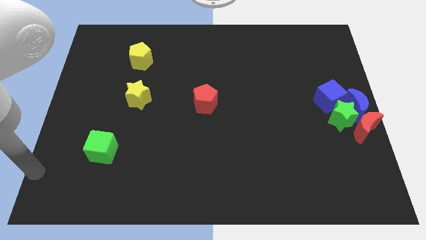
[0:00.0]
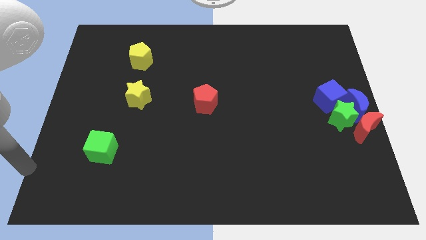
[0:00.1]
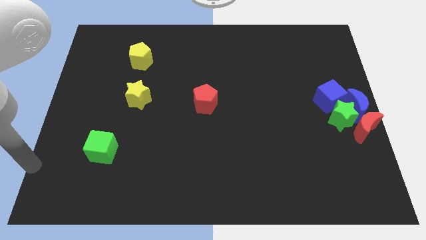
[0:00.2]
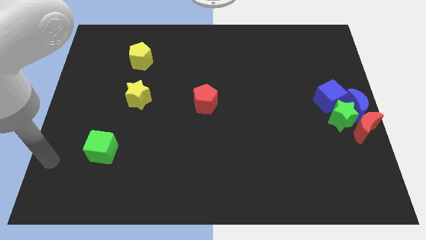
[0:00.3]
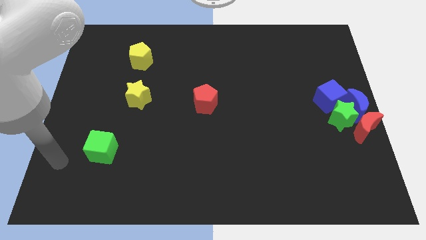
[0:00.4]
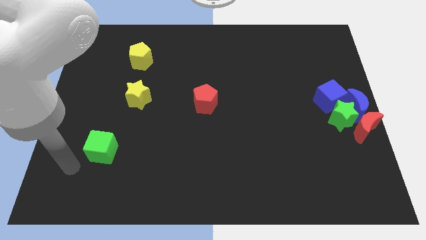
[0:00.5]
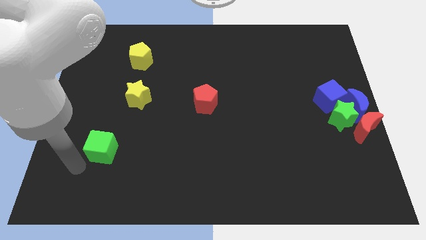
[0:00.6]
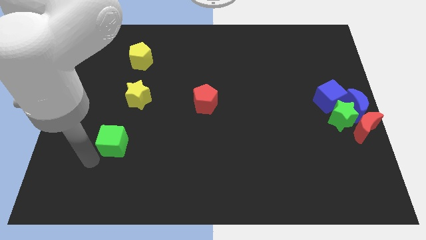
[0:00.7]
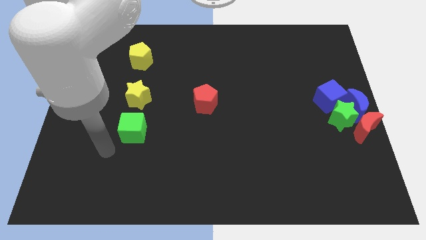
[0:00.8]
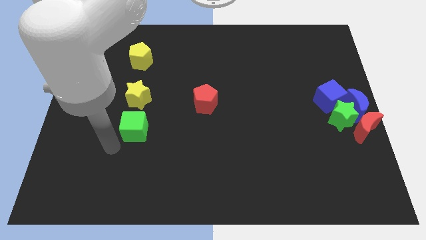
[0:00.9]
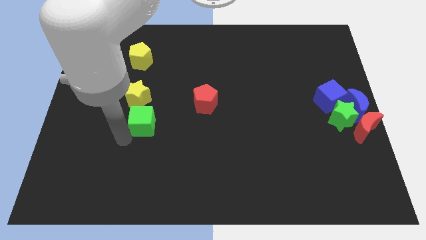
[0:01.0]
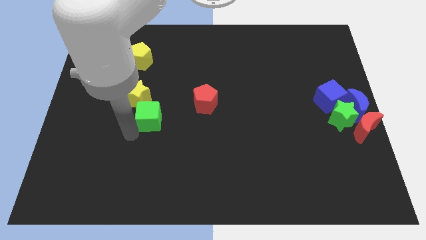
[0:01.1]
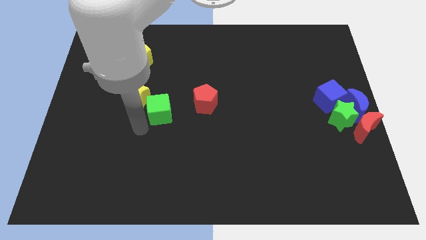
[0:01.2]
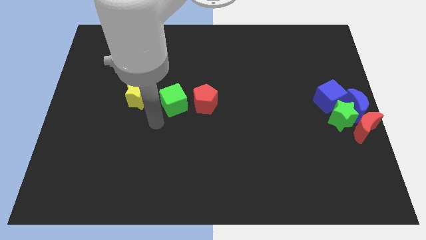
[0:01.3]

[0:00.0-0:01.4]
place the green cube in between the red pentagon and the yellow star

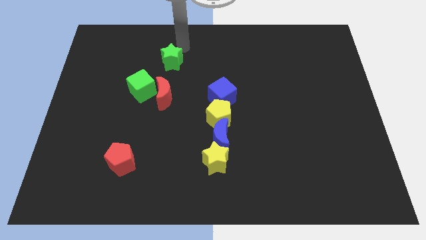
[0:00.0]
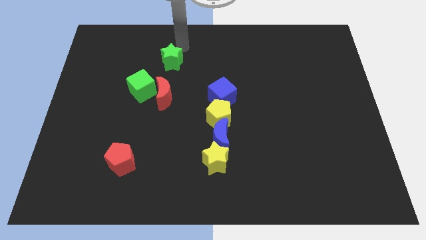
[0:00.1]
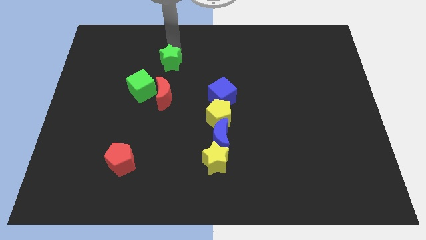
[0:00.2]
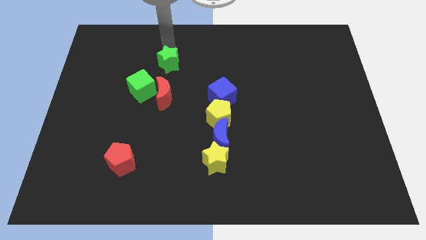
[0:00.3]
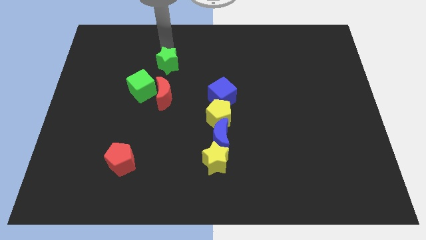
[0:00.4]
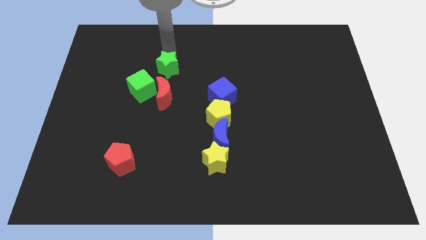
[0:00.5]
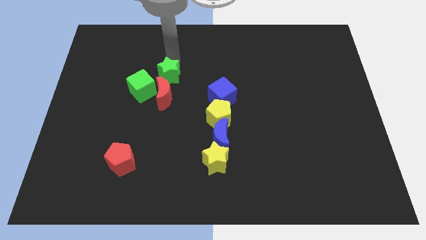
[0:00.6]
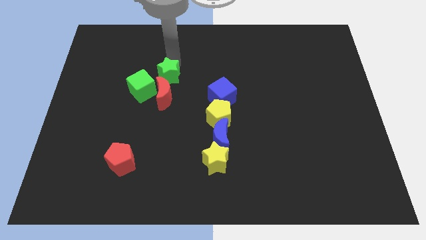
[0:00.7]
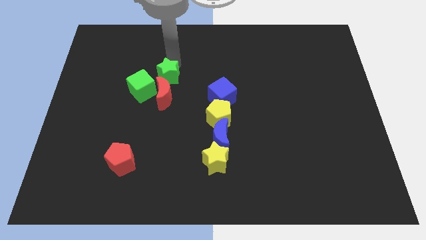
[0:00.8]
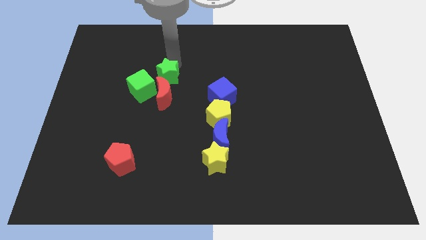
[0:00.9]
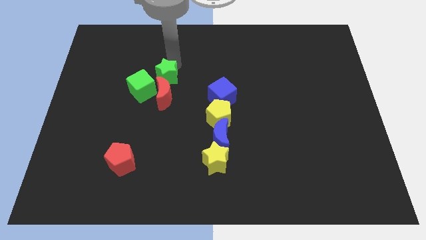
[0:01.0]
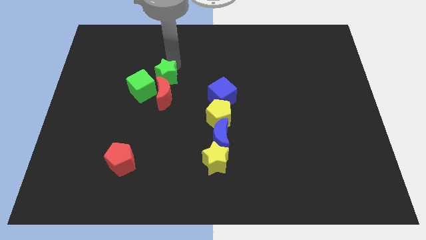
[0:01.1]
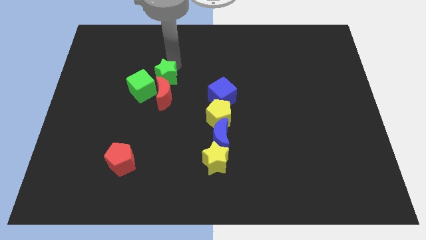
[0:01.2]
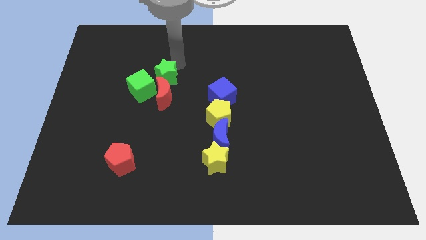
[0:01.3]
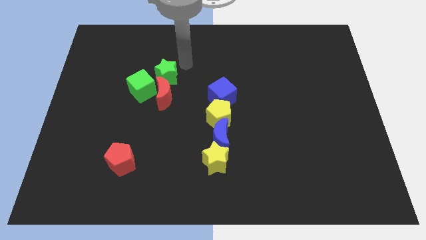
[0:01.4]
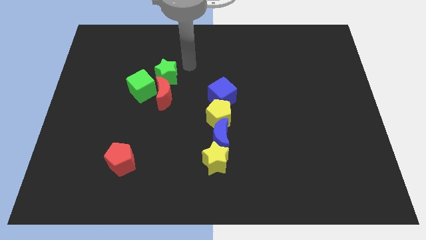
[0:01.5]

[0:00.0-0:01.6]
move the green star to the top of red crescent on the board

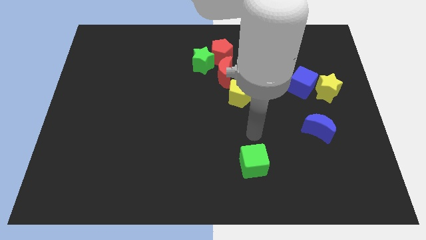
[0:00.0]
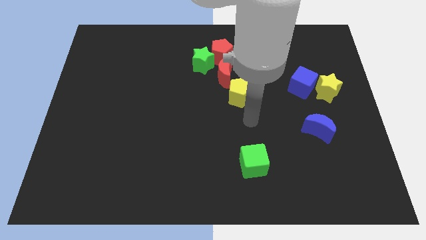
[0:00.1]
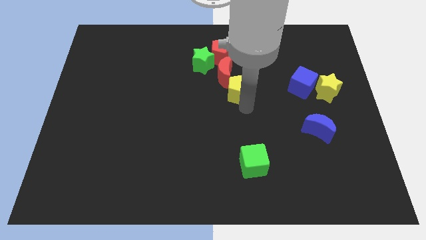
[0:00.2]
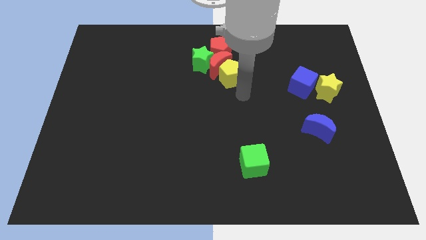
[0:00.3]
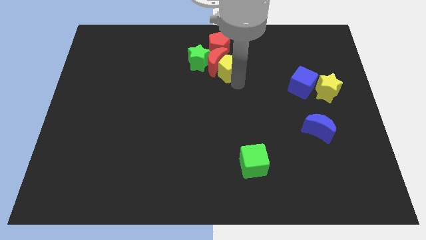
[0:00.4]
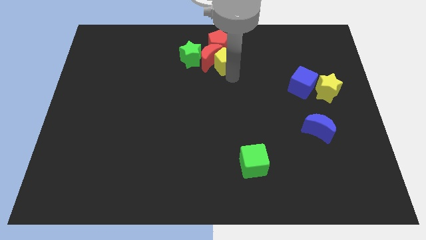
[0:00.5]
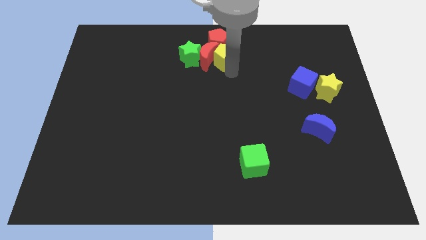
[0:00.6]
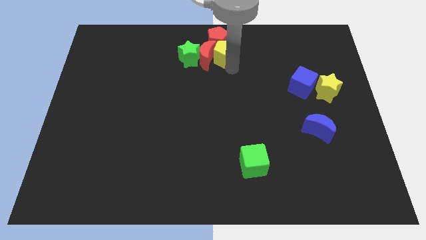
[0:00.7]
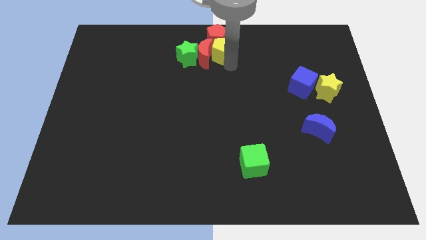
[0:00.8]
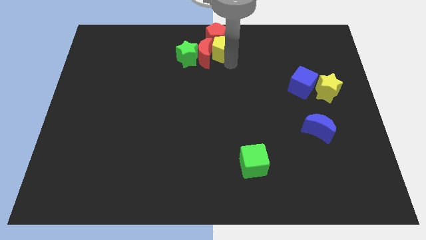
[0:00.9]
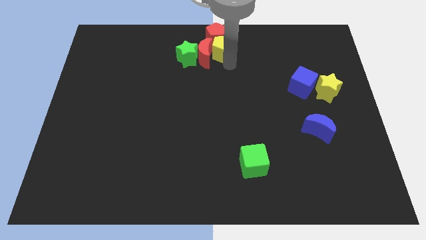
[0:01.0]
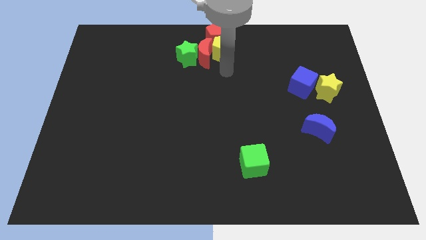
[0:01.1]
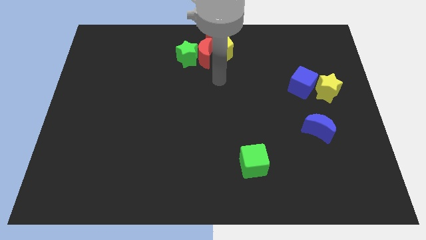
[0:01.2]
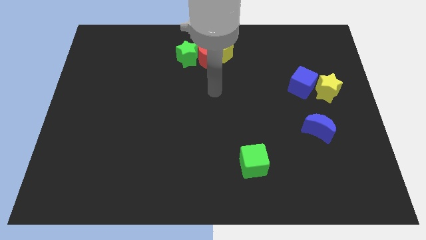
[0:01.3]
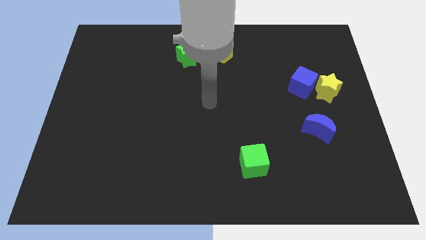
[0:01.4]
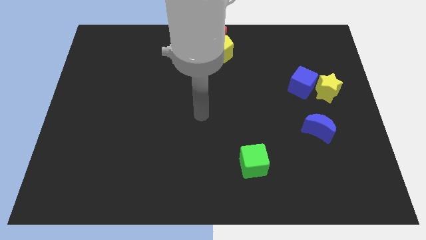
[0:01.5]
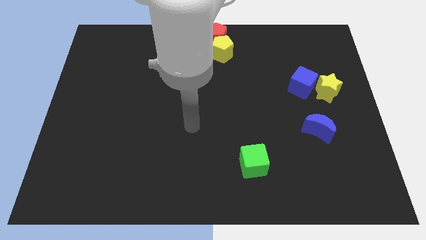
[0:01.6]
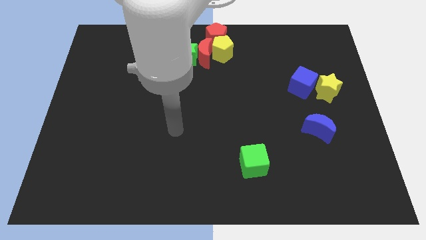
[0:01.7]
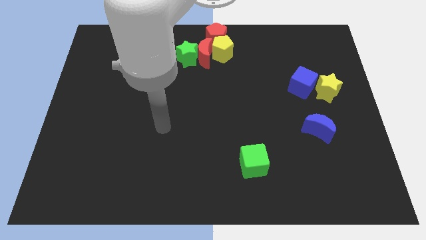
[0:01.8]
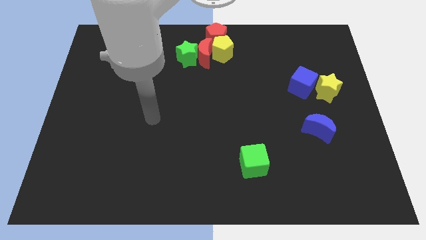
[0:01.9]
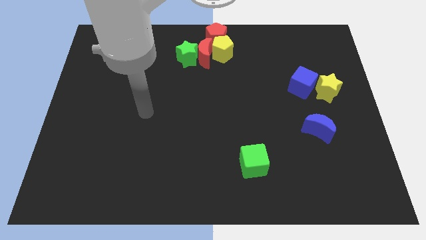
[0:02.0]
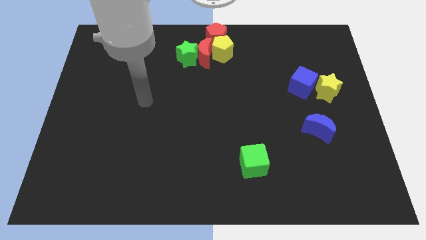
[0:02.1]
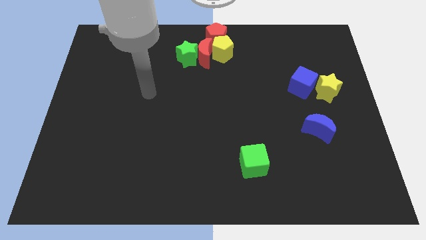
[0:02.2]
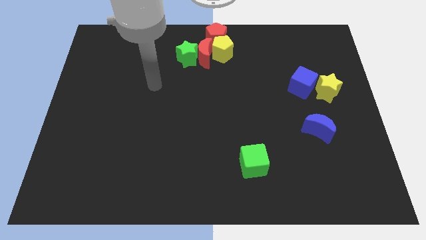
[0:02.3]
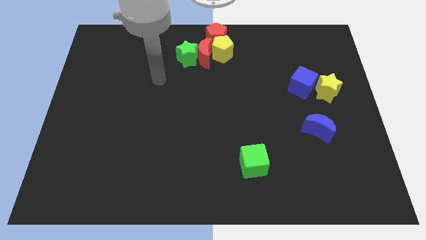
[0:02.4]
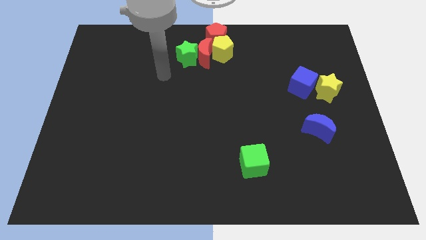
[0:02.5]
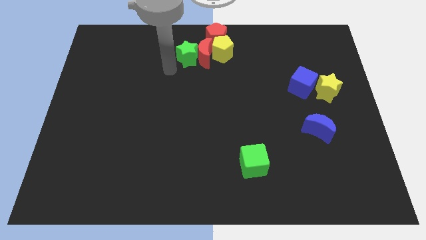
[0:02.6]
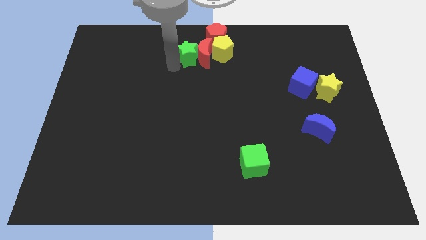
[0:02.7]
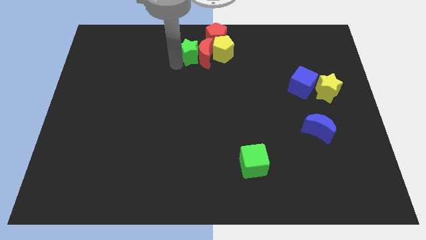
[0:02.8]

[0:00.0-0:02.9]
push the yellow pentagon into the group of red blocks

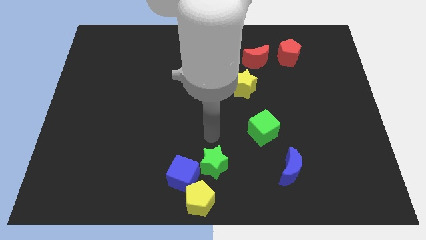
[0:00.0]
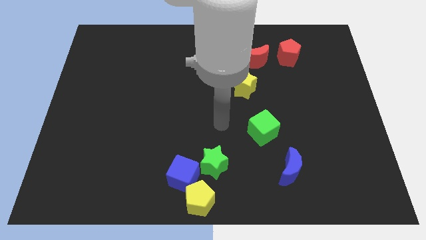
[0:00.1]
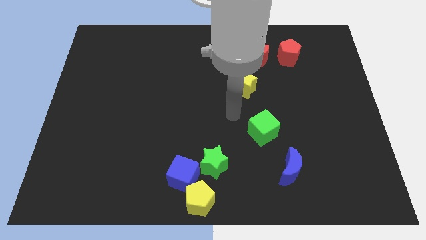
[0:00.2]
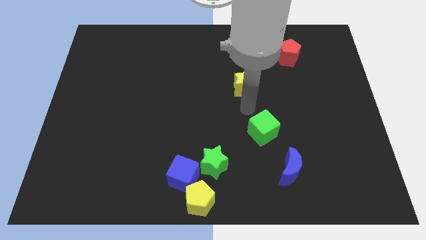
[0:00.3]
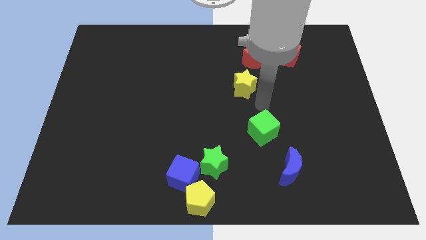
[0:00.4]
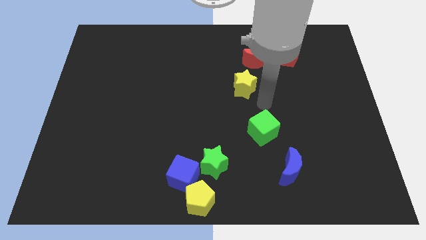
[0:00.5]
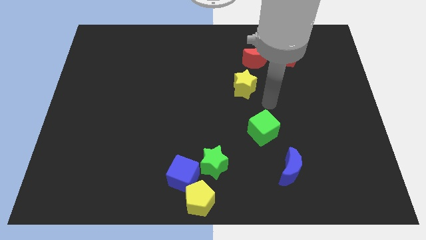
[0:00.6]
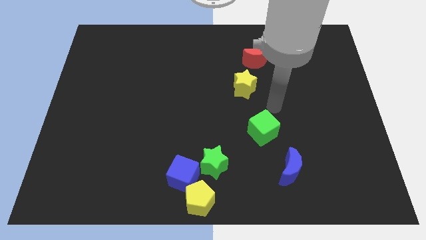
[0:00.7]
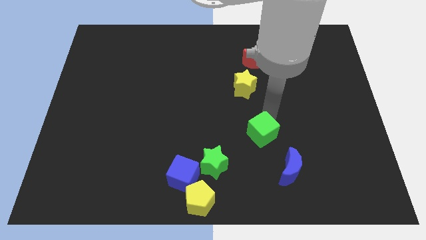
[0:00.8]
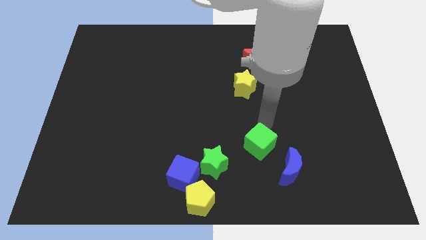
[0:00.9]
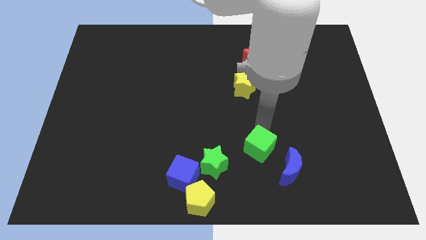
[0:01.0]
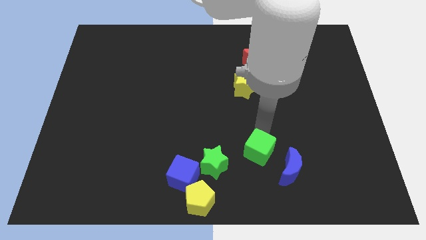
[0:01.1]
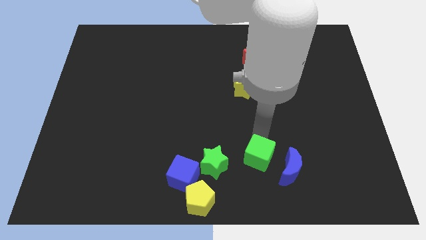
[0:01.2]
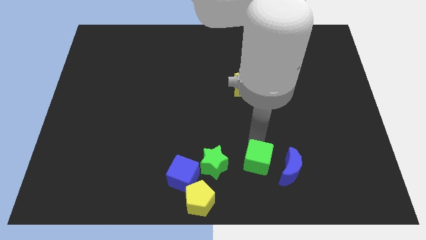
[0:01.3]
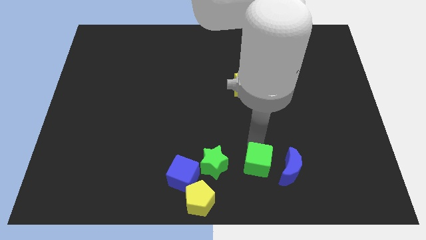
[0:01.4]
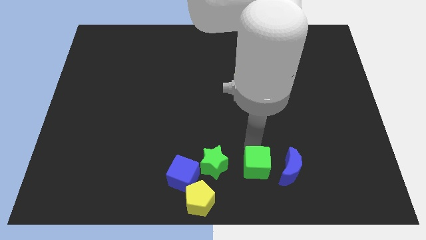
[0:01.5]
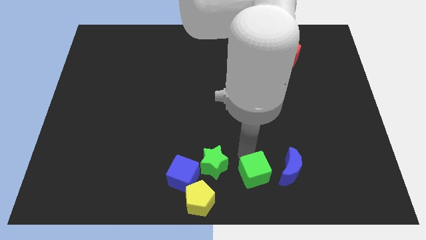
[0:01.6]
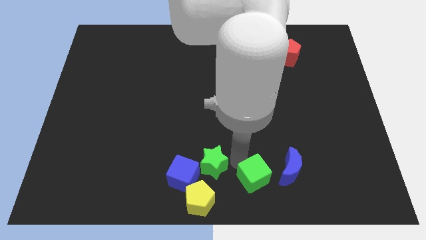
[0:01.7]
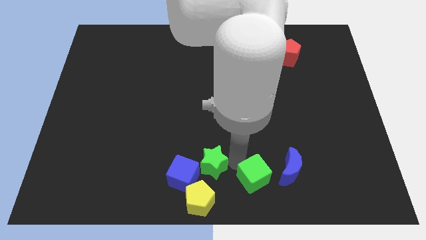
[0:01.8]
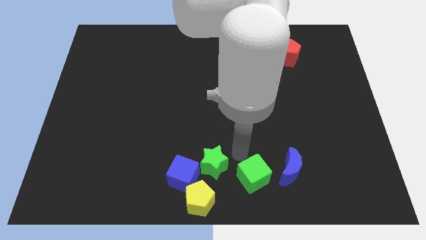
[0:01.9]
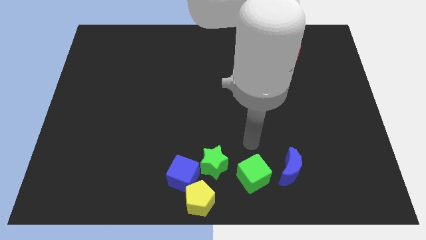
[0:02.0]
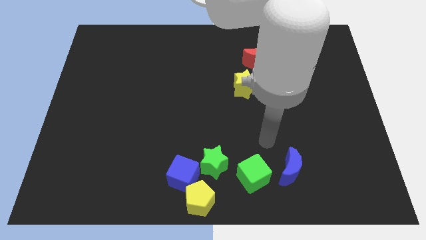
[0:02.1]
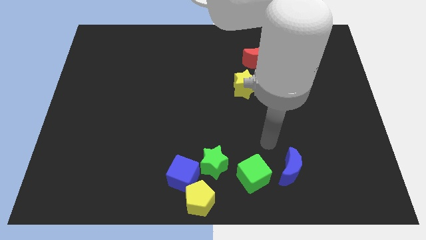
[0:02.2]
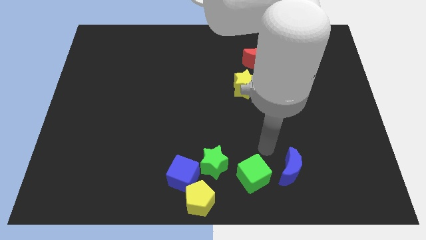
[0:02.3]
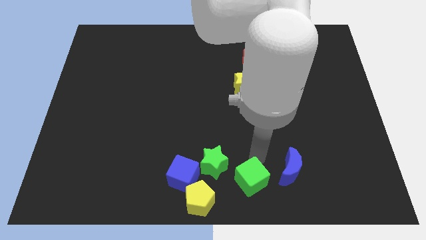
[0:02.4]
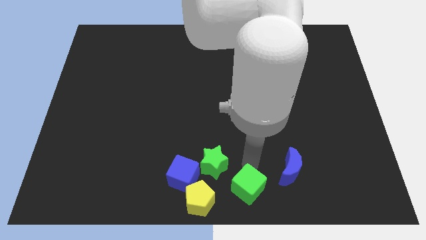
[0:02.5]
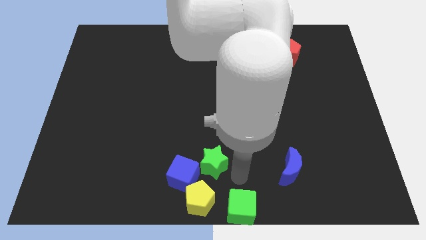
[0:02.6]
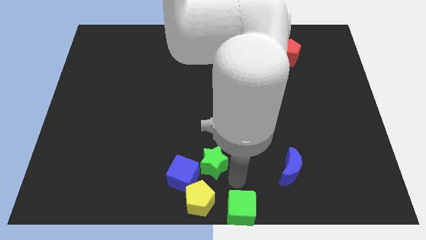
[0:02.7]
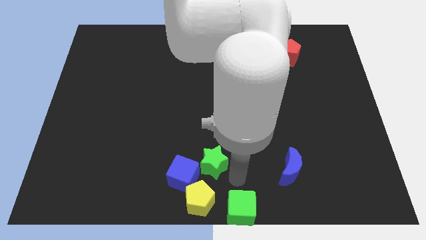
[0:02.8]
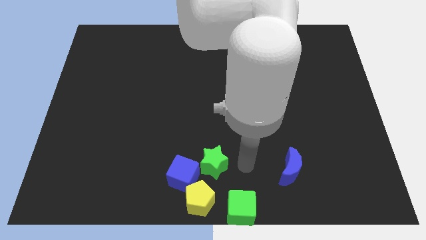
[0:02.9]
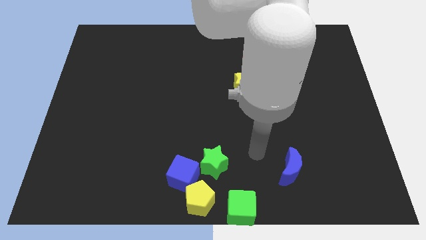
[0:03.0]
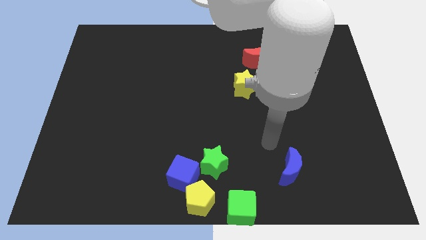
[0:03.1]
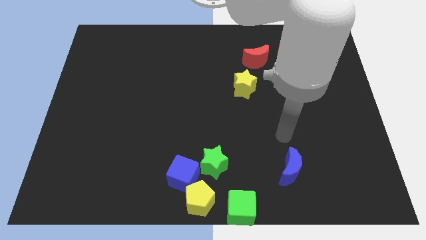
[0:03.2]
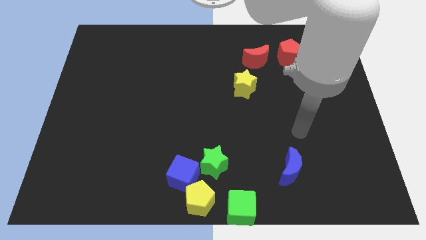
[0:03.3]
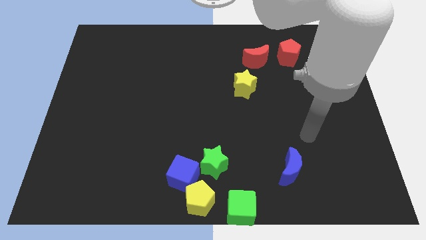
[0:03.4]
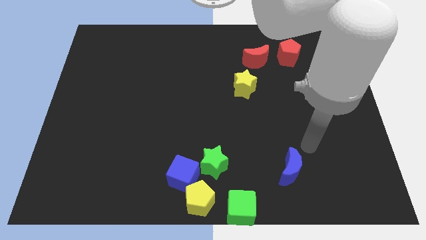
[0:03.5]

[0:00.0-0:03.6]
place the green cube at the bottom center of the board
